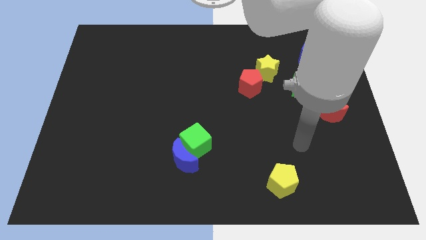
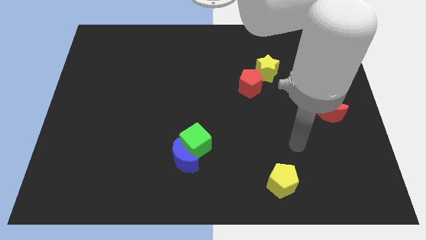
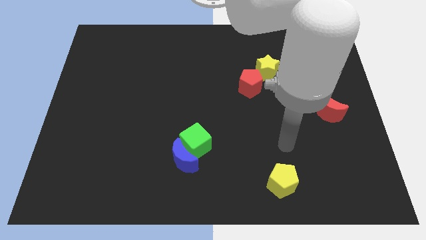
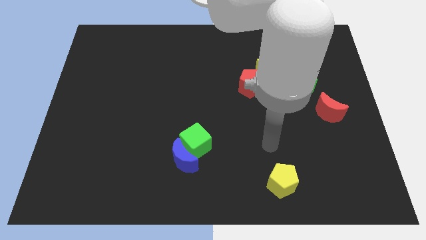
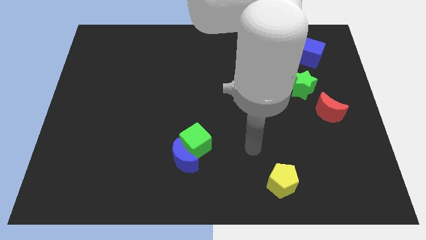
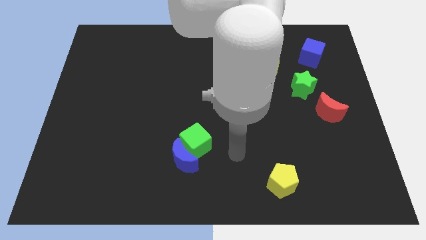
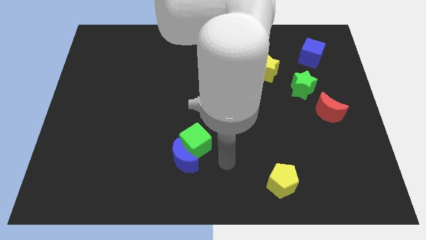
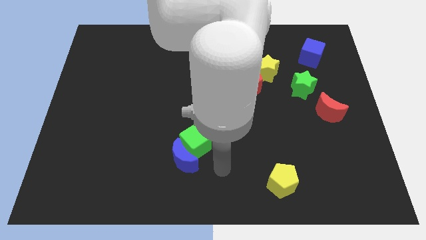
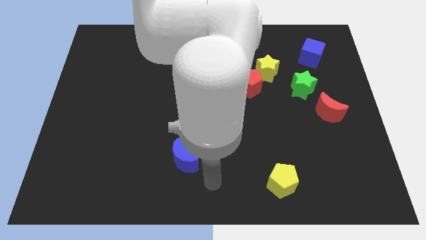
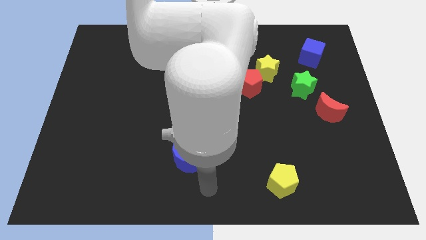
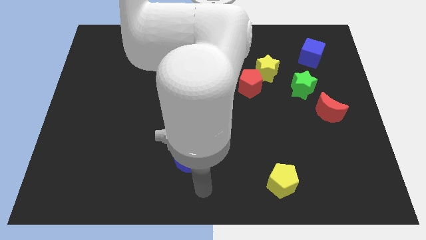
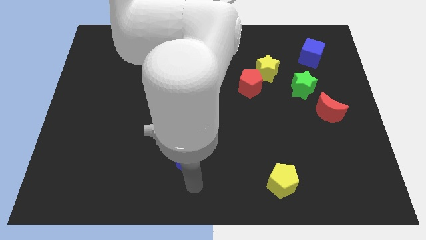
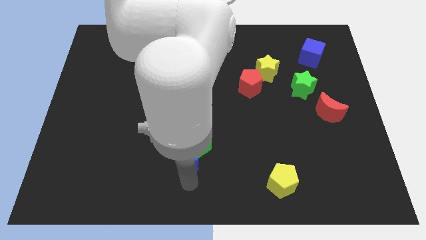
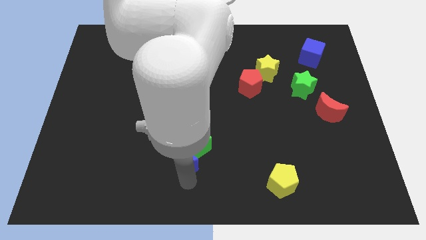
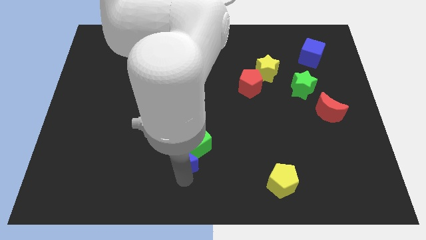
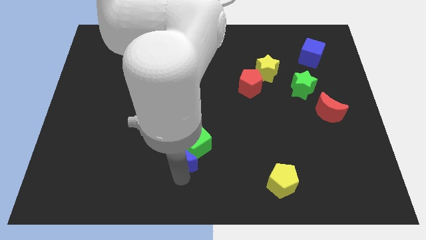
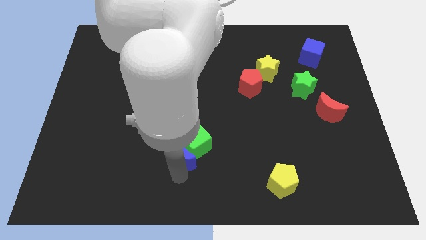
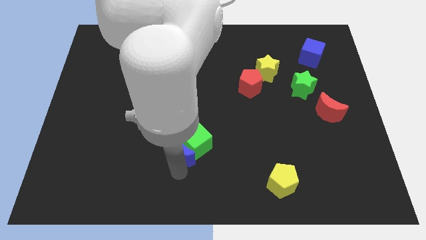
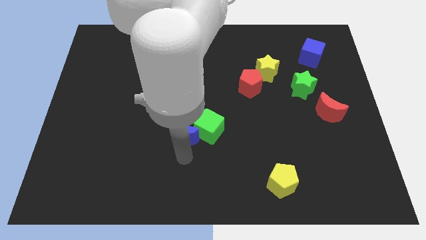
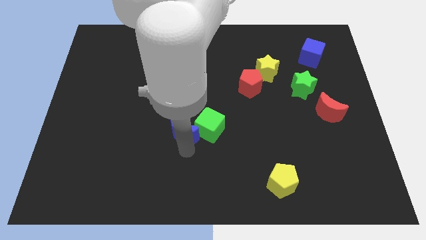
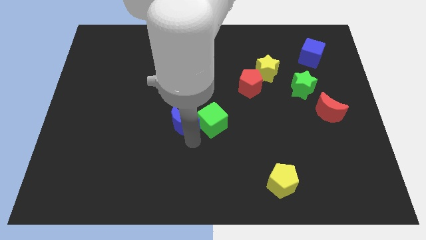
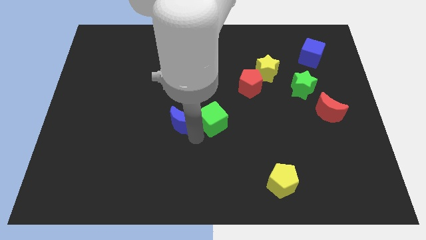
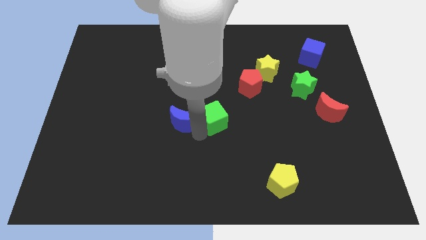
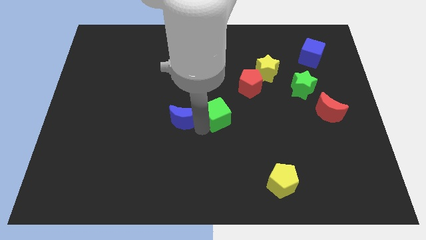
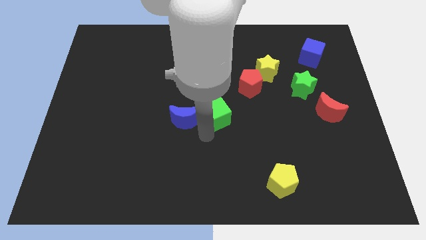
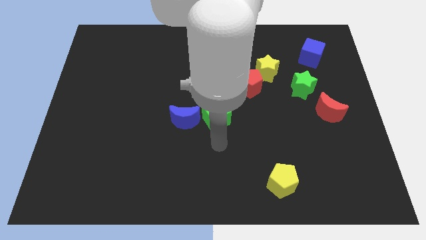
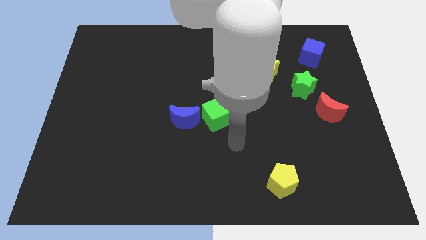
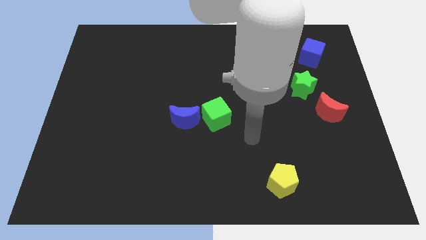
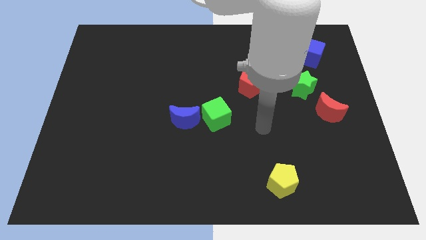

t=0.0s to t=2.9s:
push the blue crescent into the green cube

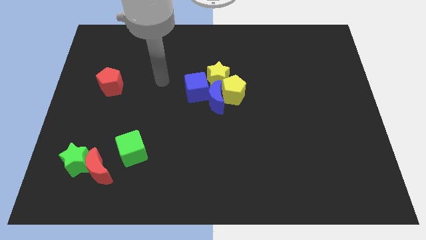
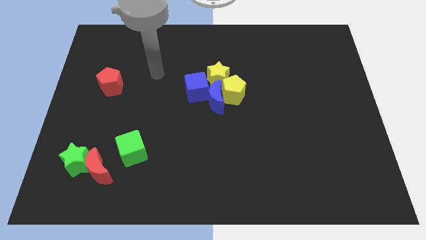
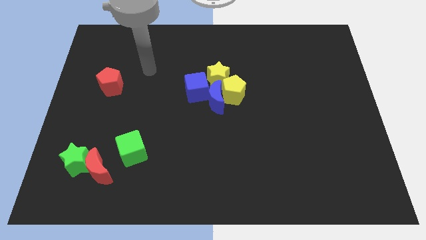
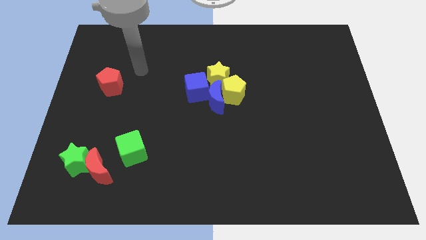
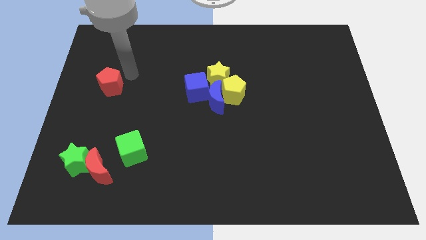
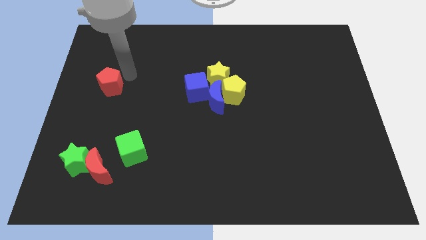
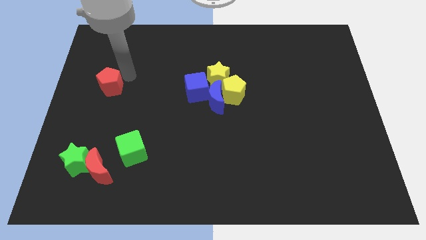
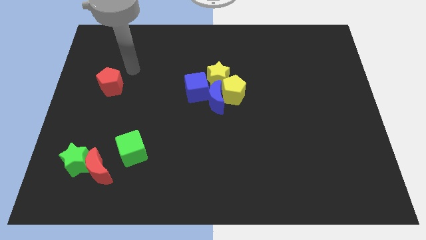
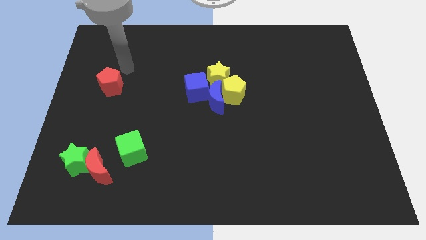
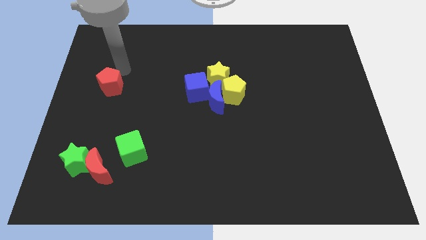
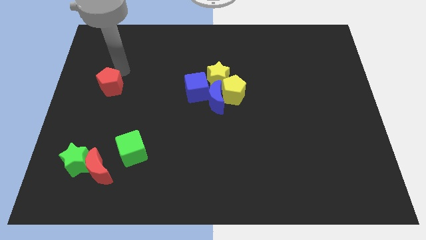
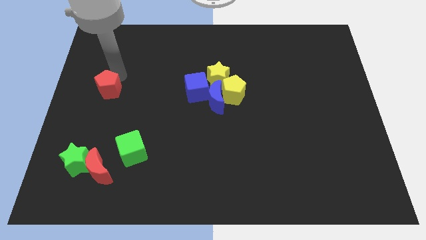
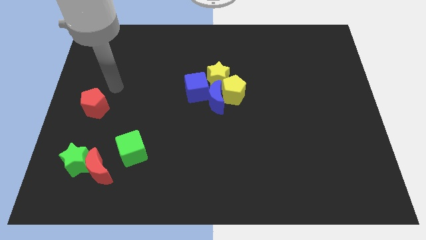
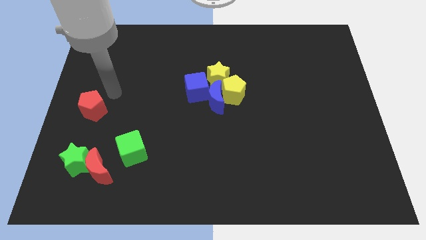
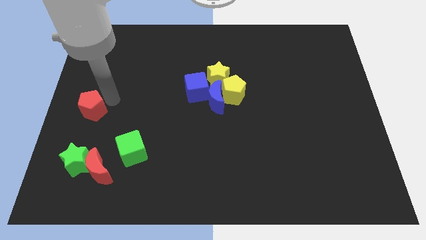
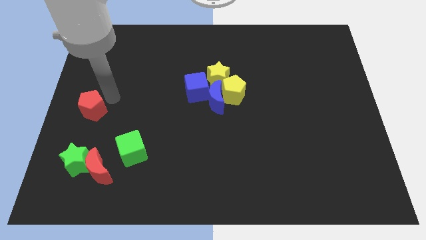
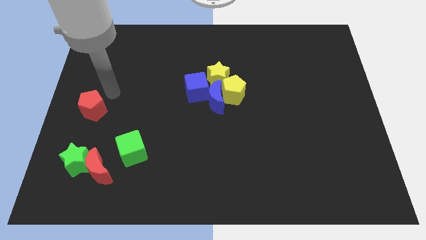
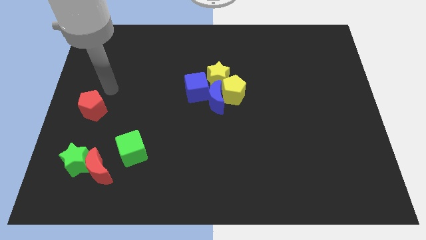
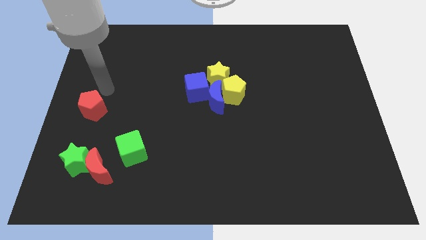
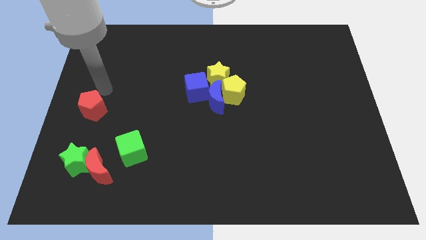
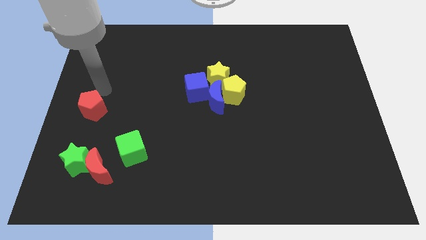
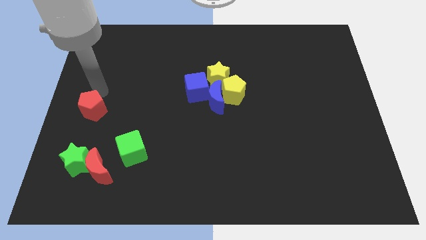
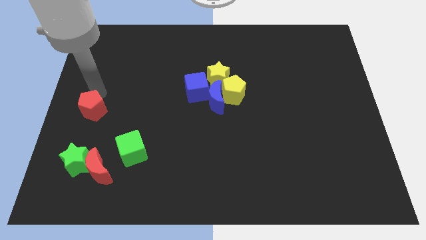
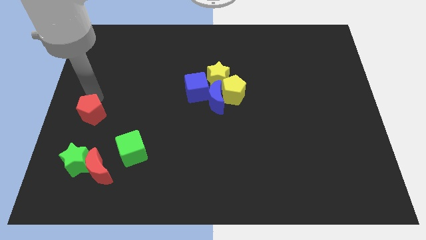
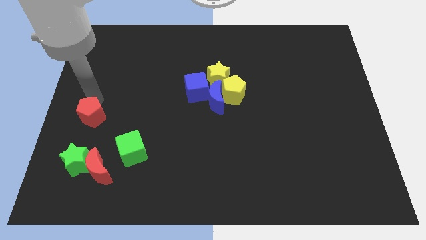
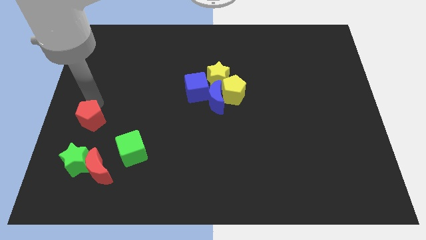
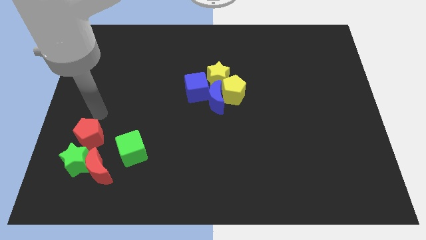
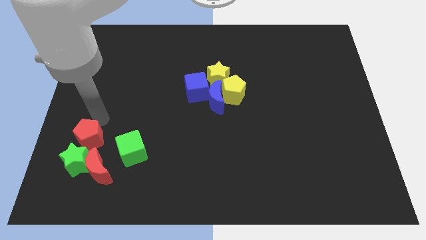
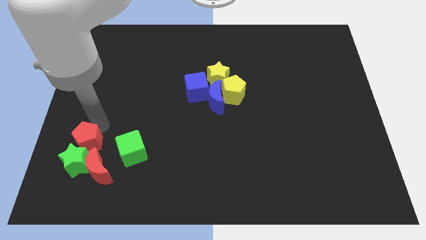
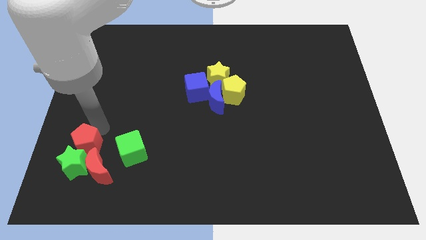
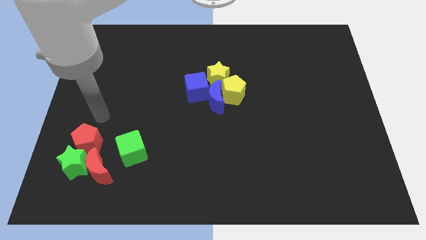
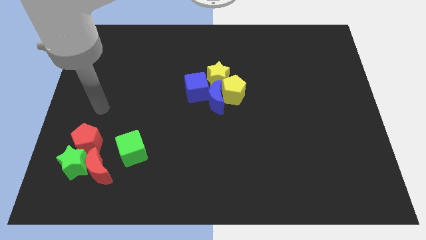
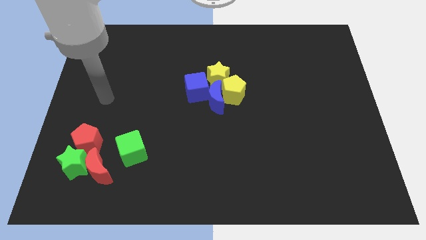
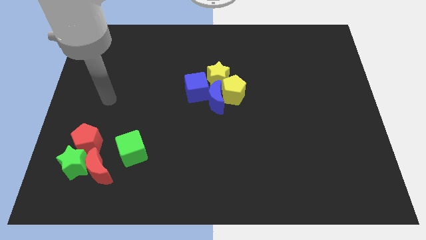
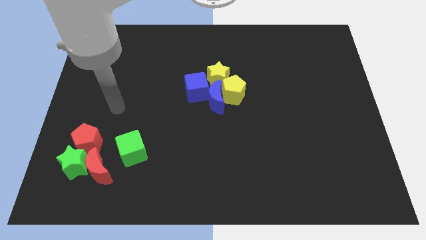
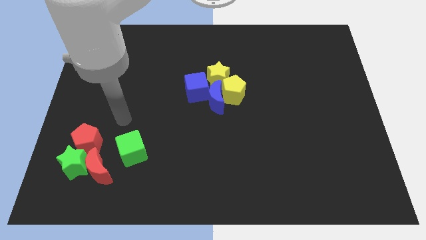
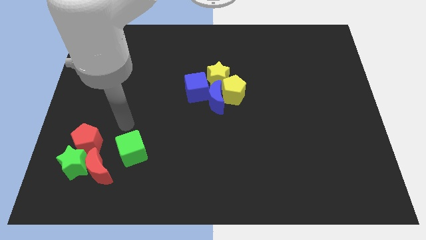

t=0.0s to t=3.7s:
push the red pentagon into the green star

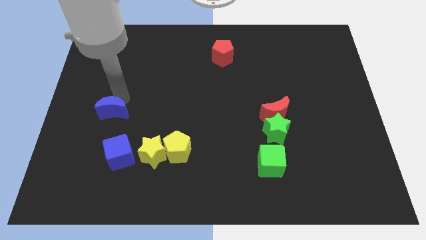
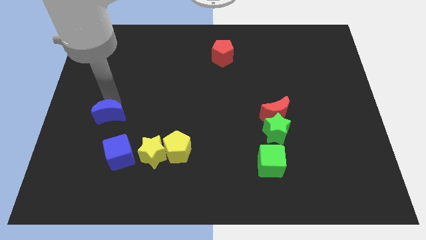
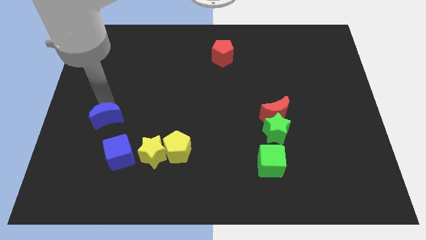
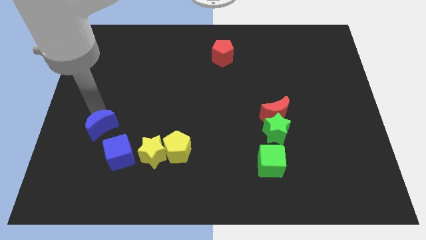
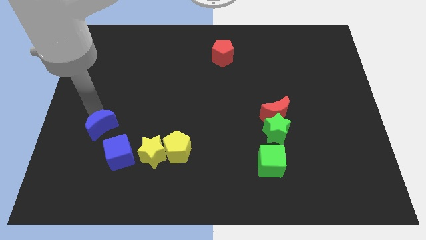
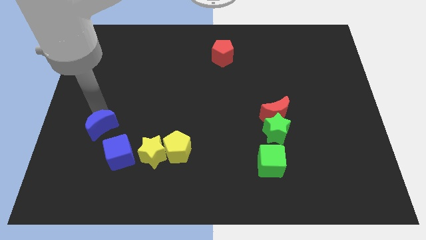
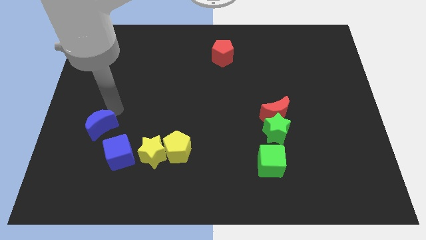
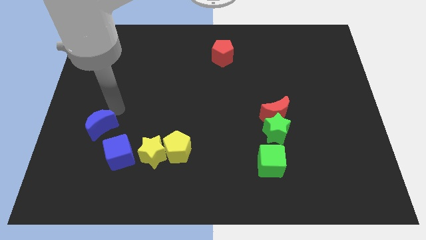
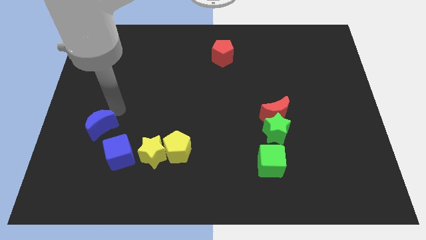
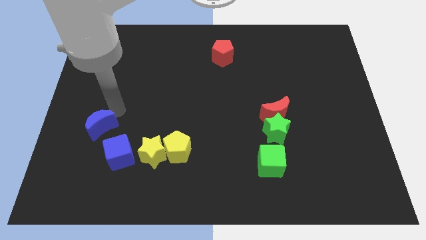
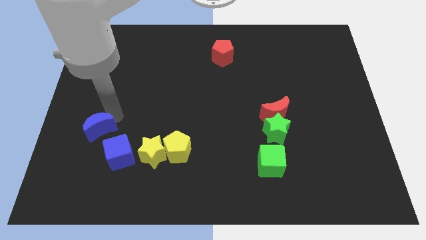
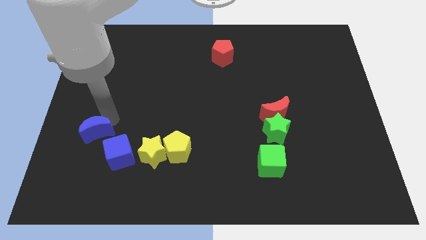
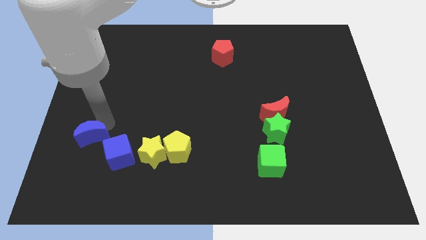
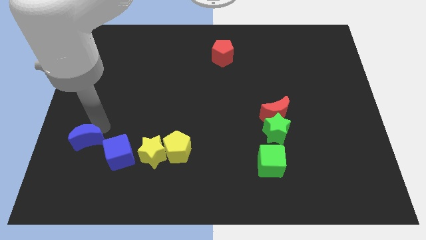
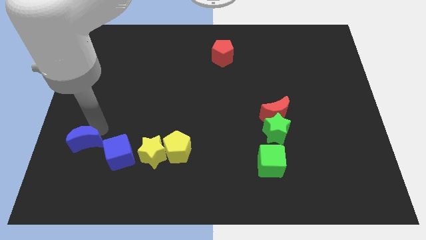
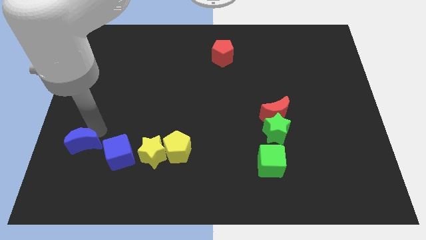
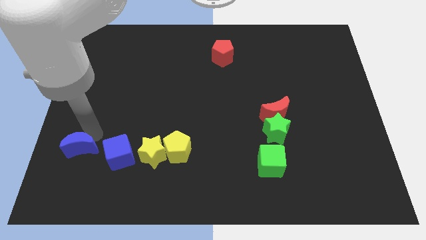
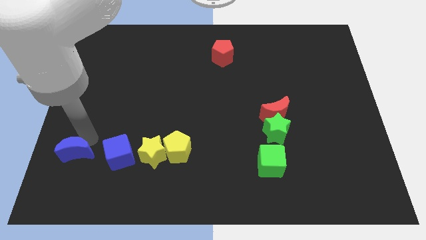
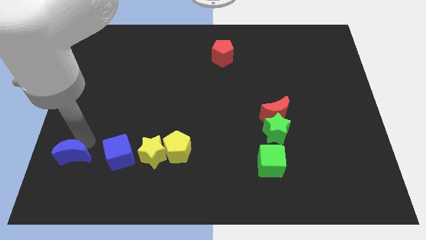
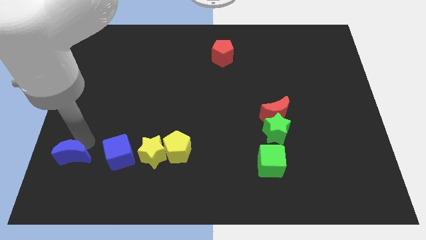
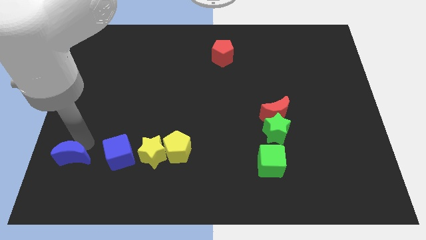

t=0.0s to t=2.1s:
move the blue crescent to the left of the blue cube

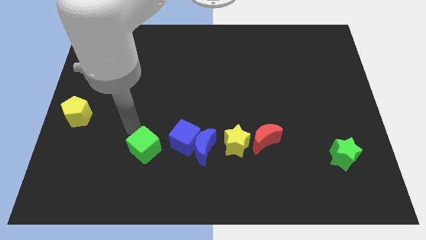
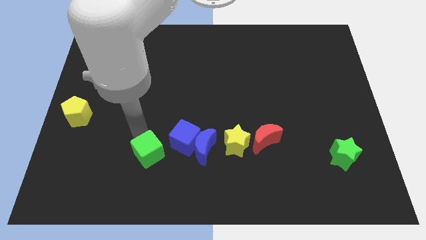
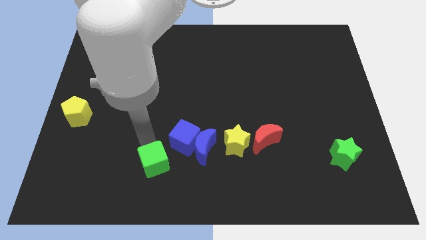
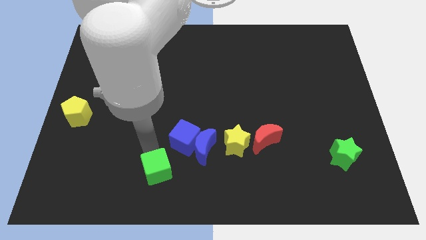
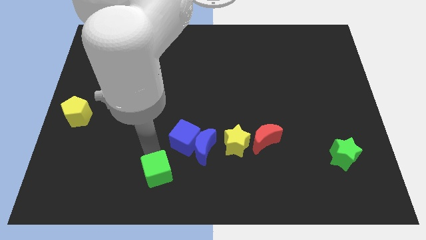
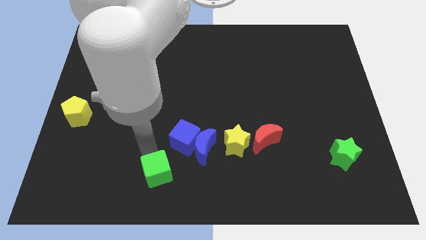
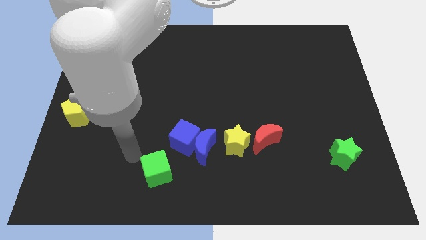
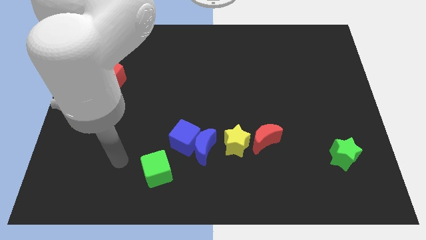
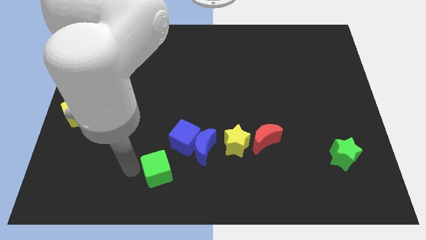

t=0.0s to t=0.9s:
push the green cube to the bottom left of the blue cube
